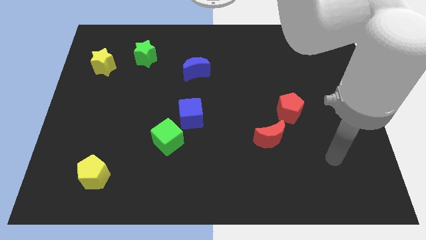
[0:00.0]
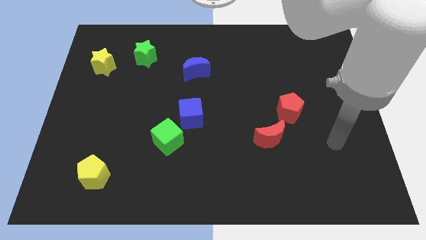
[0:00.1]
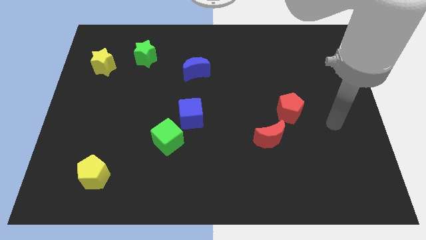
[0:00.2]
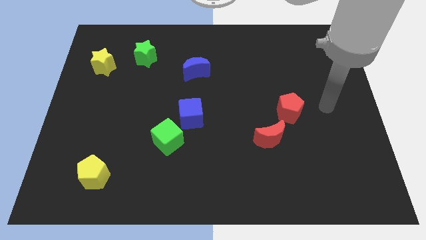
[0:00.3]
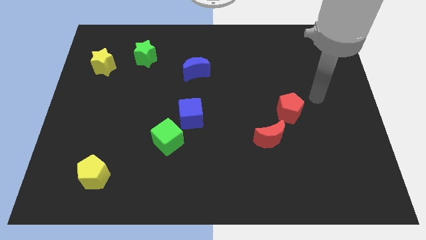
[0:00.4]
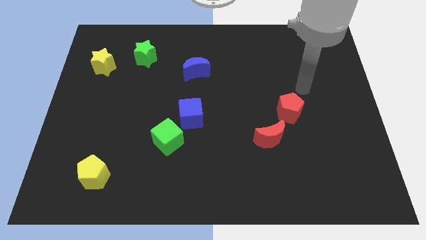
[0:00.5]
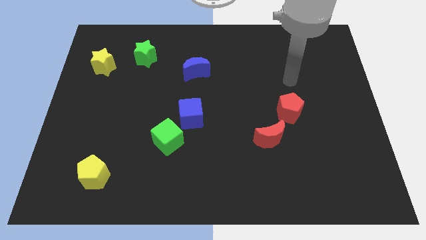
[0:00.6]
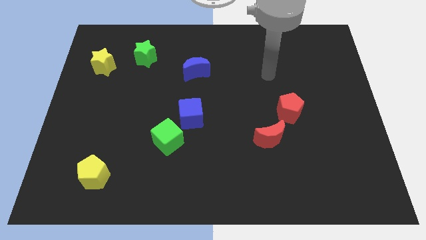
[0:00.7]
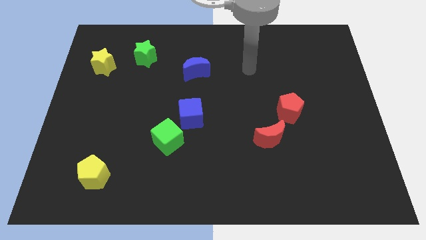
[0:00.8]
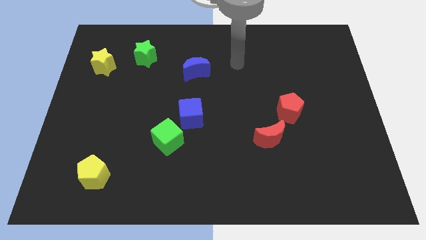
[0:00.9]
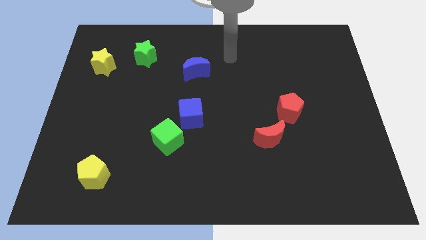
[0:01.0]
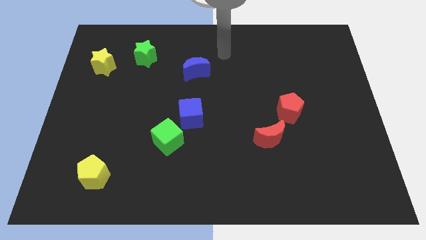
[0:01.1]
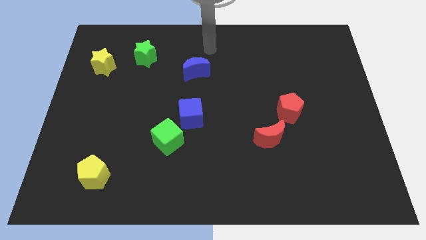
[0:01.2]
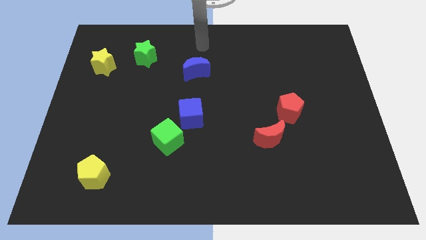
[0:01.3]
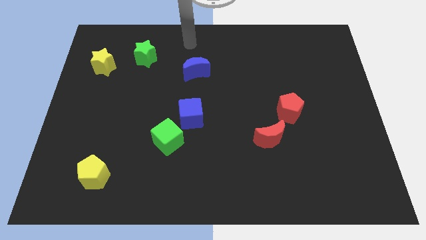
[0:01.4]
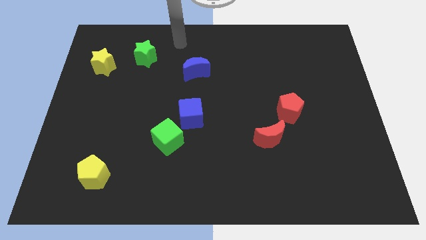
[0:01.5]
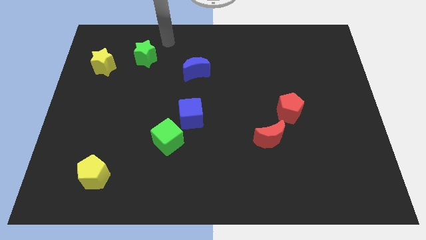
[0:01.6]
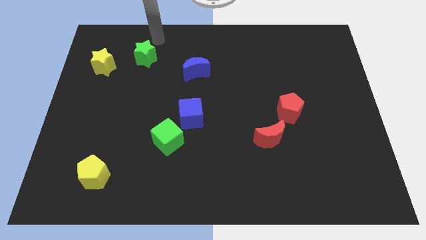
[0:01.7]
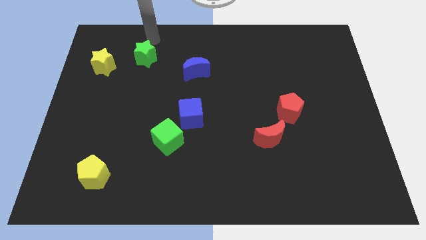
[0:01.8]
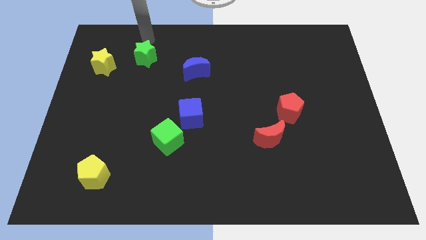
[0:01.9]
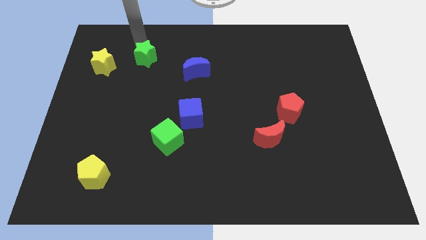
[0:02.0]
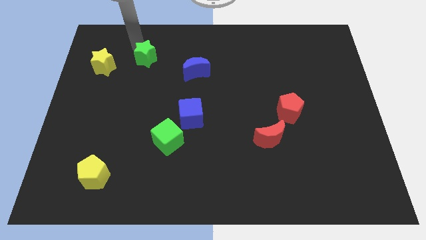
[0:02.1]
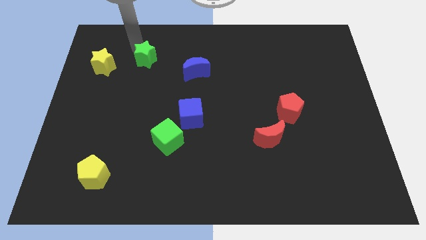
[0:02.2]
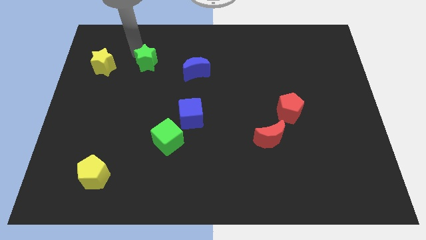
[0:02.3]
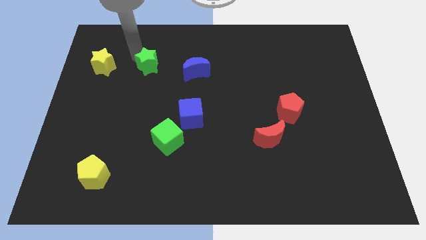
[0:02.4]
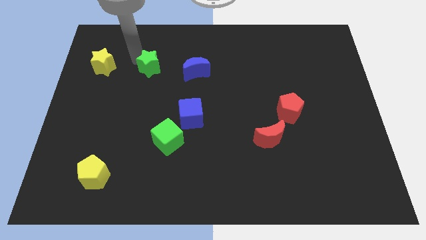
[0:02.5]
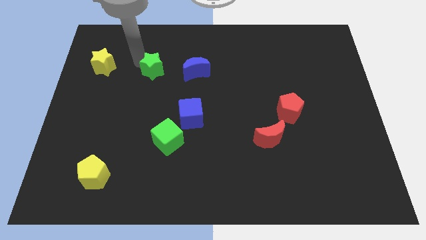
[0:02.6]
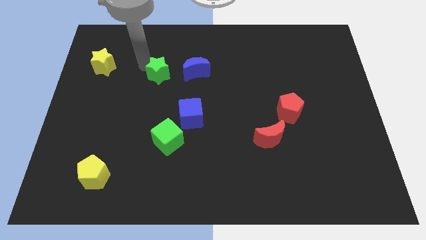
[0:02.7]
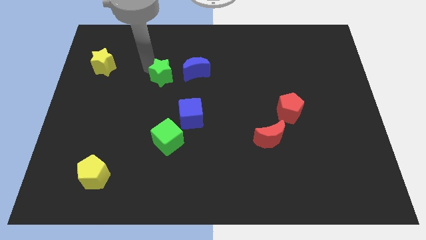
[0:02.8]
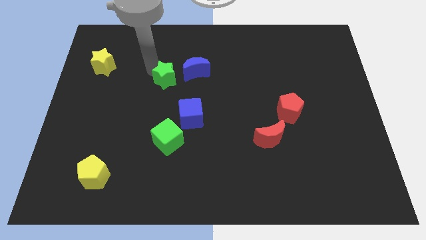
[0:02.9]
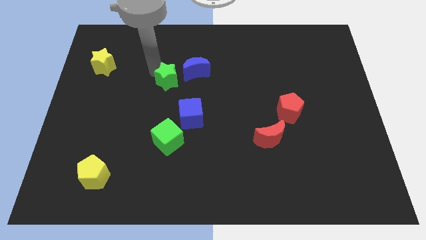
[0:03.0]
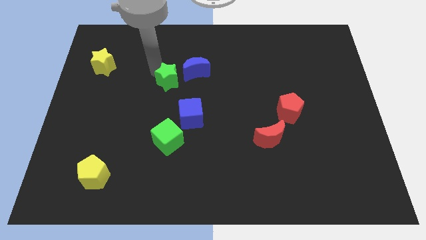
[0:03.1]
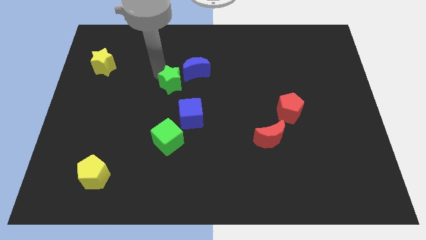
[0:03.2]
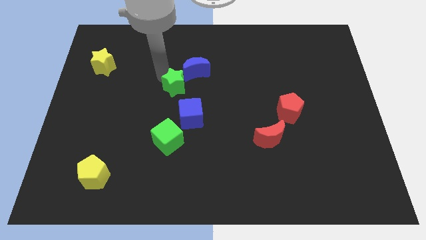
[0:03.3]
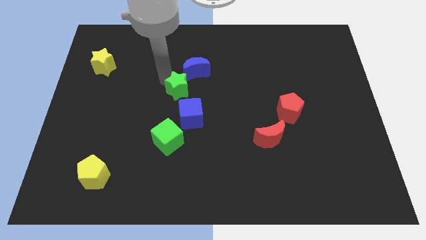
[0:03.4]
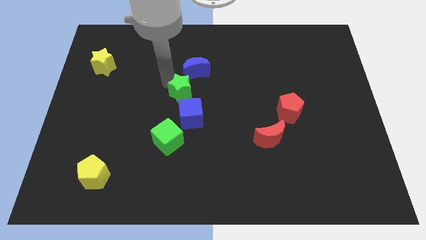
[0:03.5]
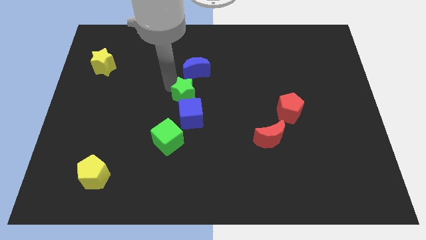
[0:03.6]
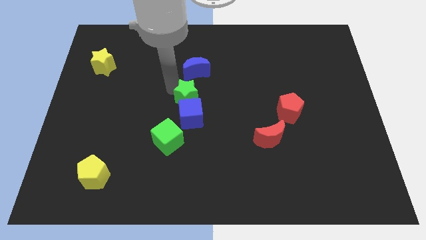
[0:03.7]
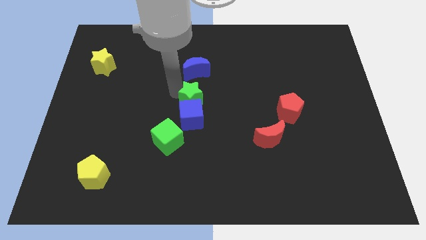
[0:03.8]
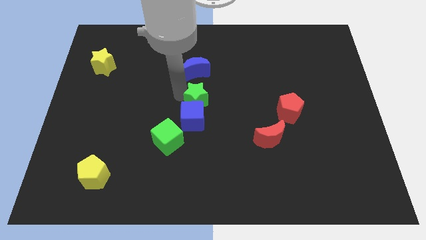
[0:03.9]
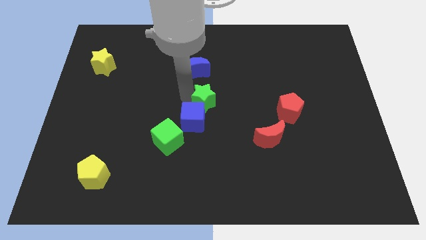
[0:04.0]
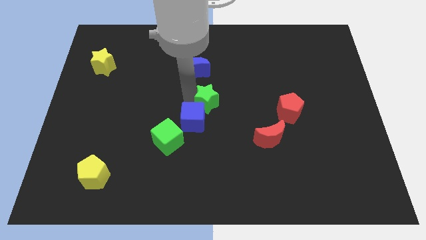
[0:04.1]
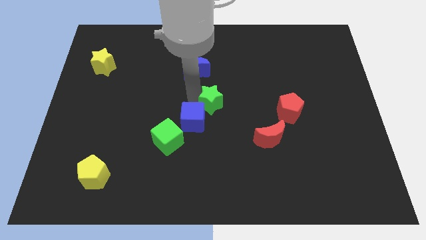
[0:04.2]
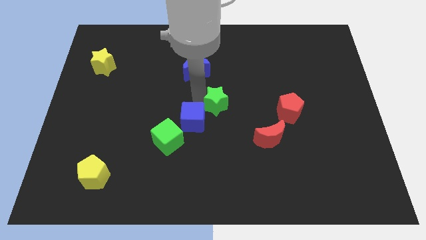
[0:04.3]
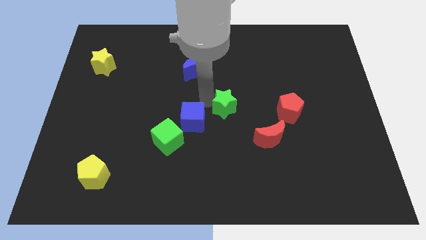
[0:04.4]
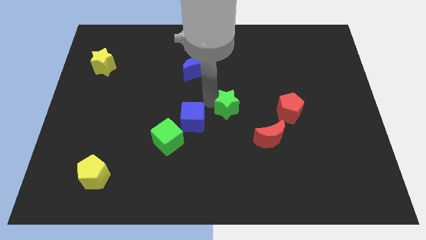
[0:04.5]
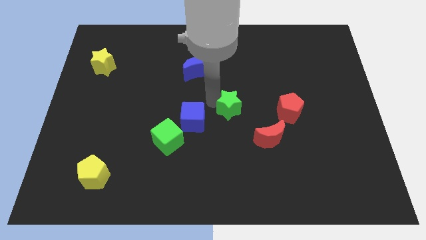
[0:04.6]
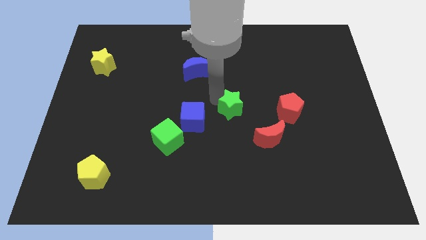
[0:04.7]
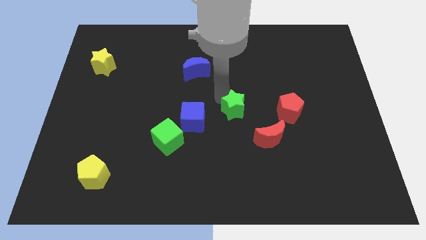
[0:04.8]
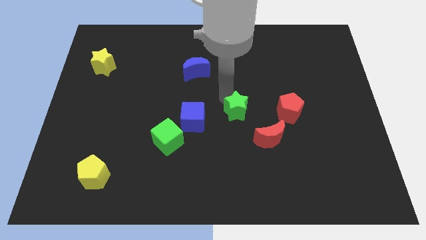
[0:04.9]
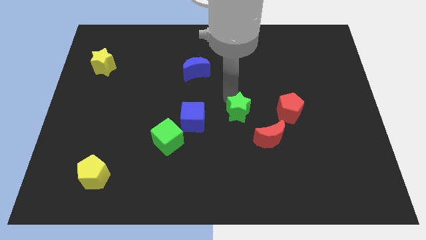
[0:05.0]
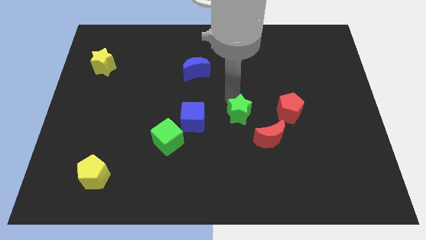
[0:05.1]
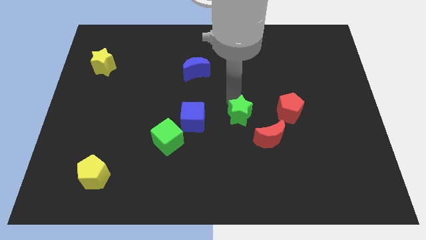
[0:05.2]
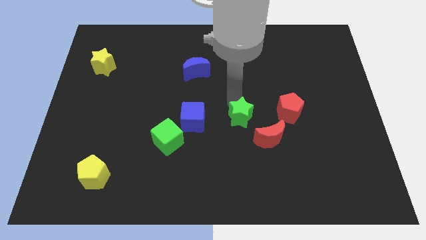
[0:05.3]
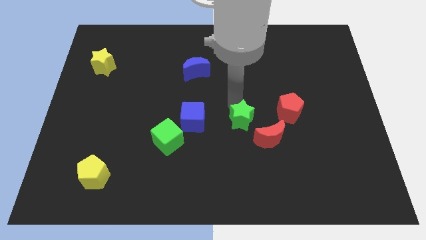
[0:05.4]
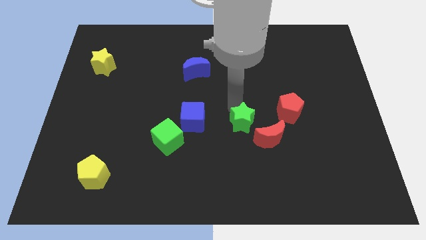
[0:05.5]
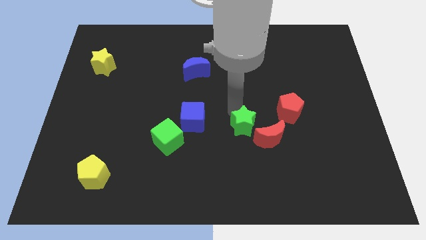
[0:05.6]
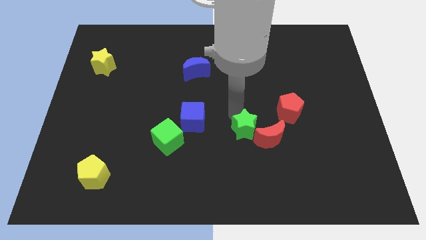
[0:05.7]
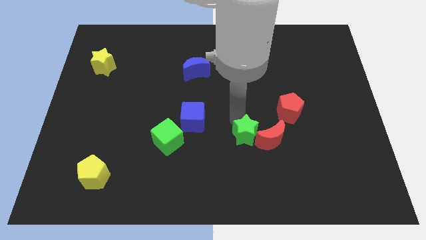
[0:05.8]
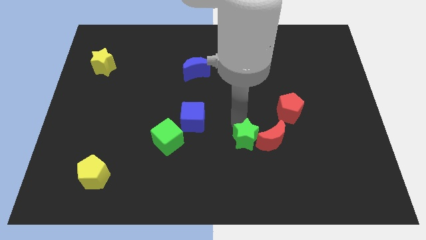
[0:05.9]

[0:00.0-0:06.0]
move the green star towards the red moon

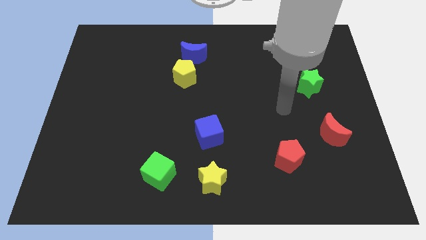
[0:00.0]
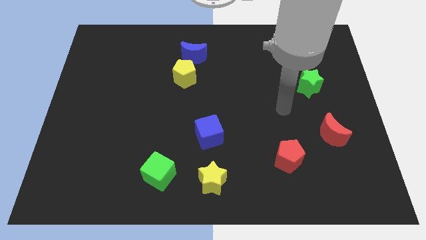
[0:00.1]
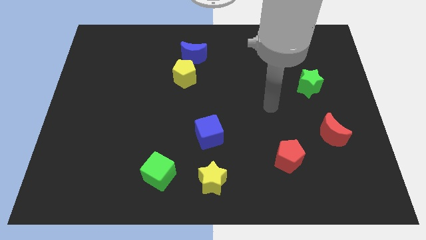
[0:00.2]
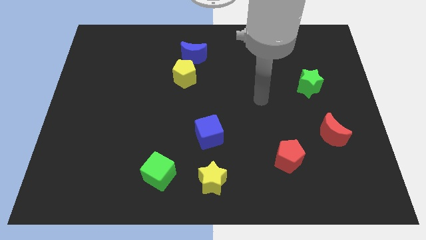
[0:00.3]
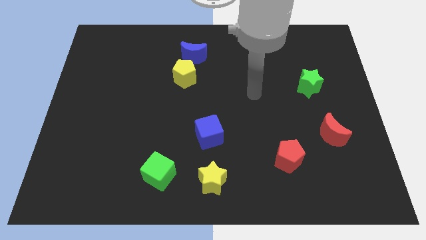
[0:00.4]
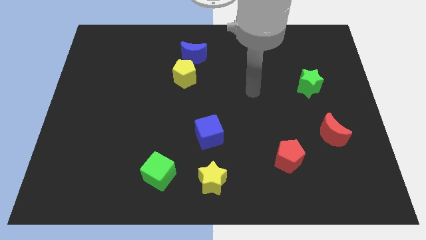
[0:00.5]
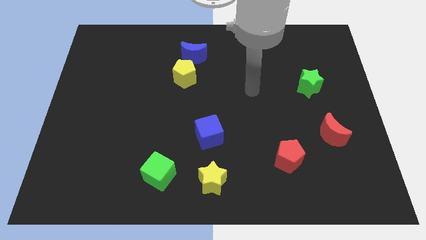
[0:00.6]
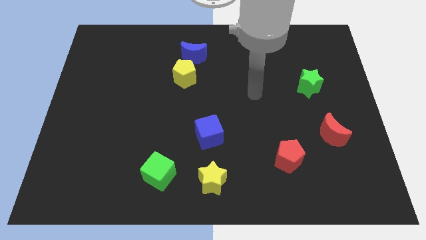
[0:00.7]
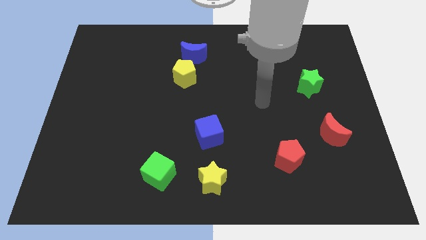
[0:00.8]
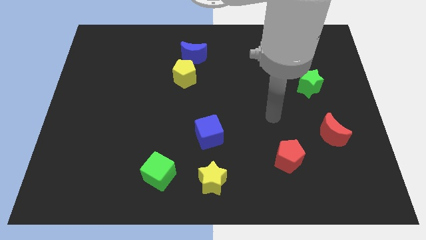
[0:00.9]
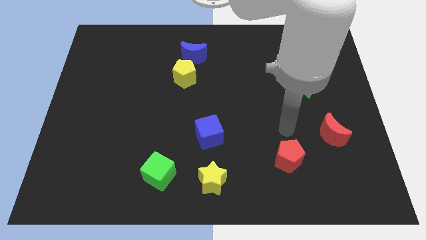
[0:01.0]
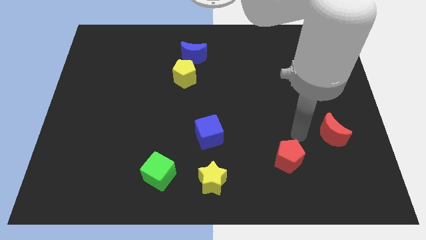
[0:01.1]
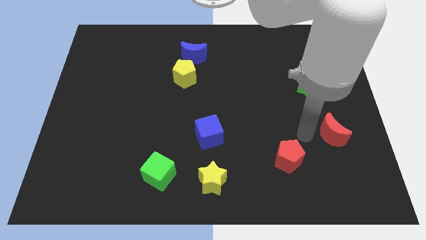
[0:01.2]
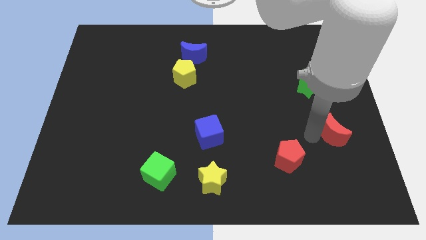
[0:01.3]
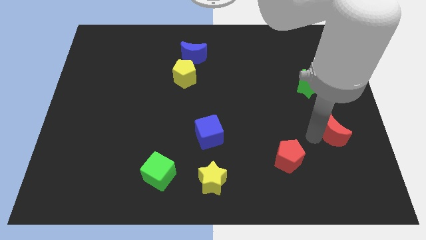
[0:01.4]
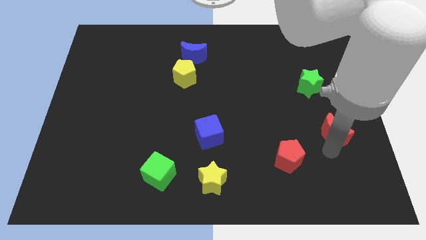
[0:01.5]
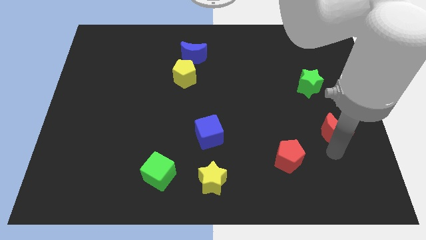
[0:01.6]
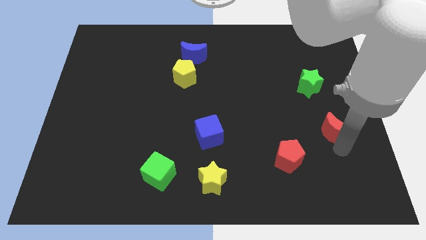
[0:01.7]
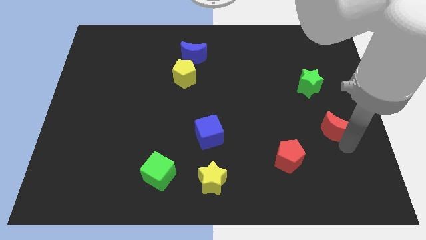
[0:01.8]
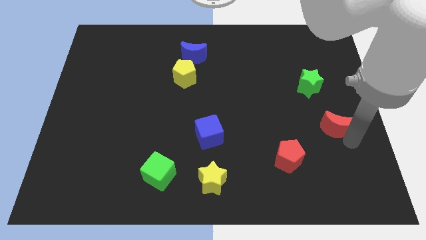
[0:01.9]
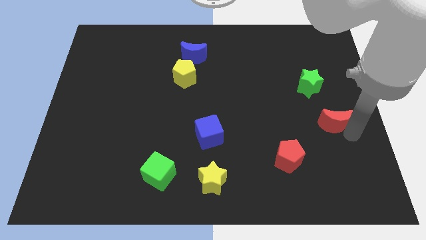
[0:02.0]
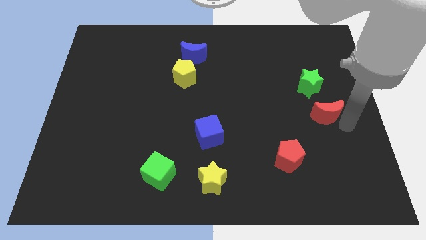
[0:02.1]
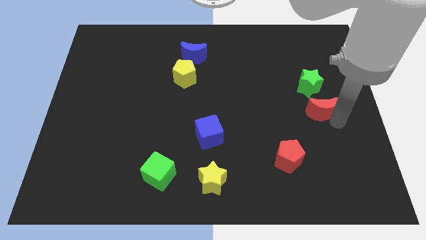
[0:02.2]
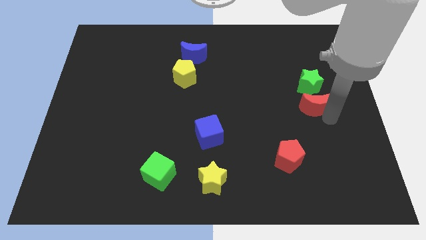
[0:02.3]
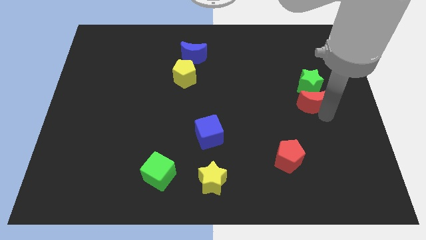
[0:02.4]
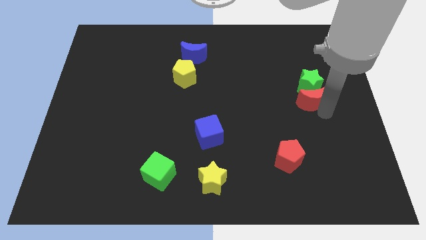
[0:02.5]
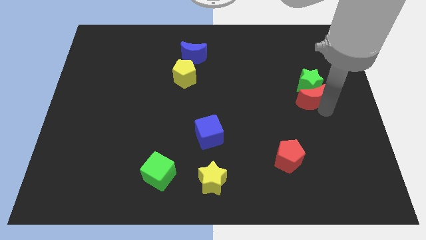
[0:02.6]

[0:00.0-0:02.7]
put the red moon next to the green star
